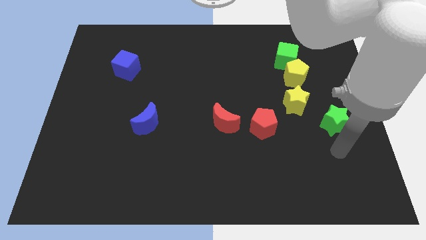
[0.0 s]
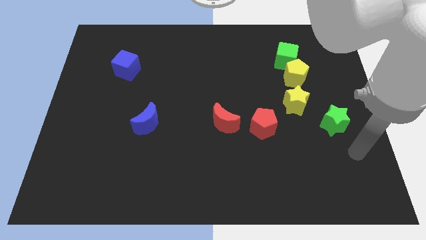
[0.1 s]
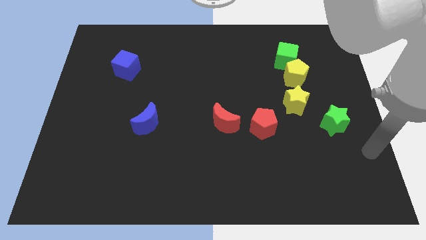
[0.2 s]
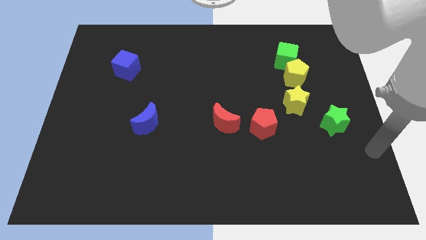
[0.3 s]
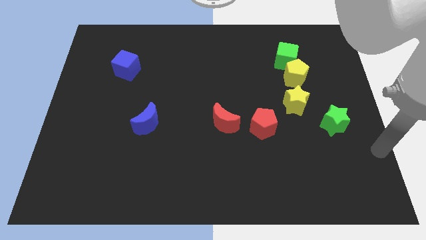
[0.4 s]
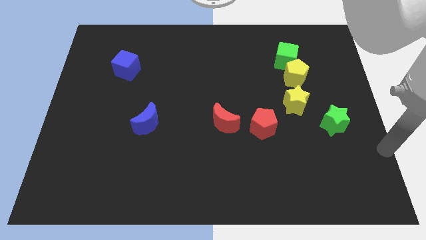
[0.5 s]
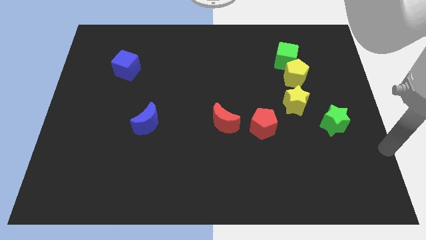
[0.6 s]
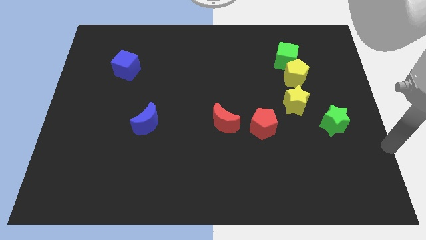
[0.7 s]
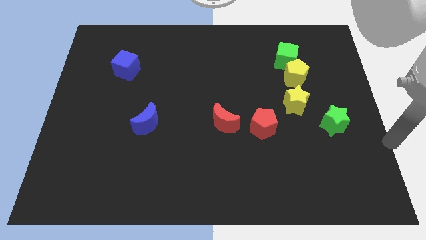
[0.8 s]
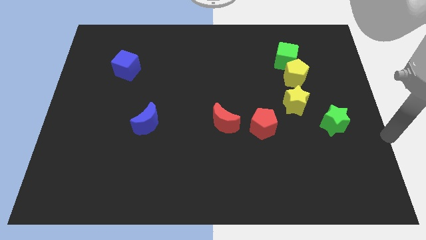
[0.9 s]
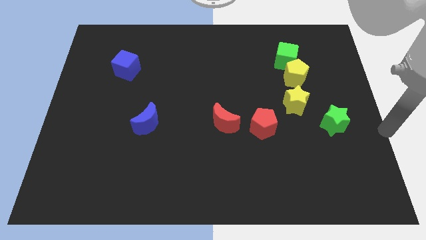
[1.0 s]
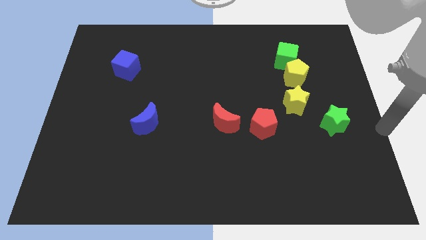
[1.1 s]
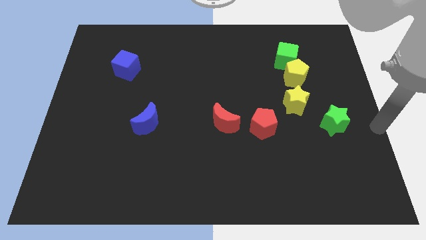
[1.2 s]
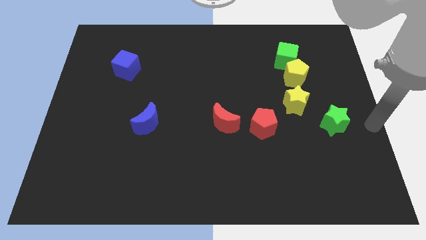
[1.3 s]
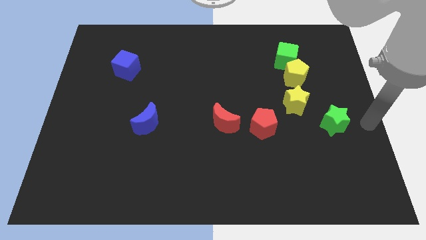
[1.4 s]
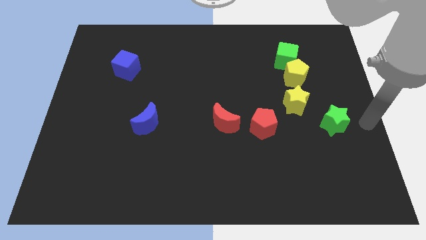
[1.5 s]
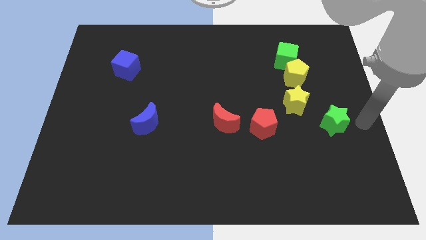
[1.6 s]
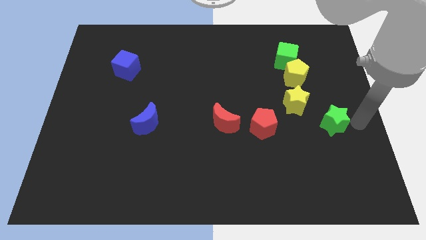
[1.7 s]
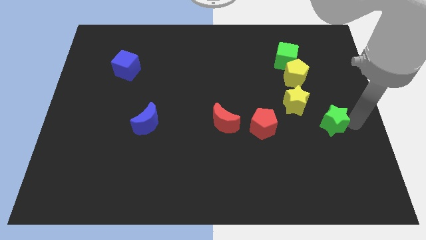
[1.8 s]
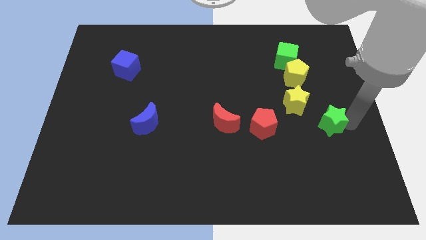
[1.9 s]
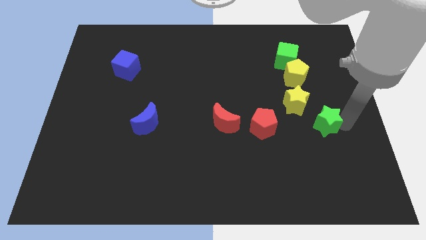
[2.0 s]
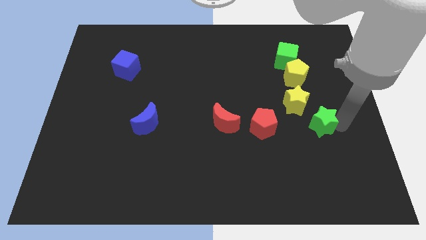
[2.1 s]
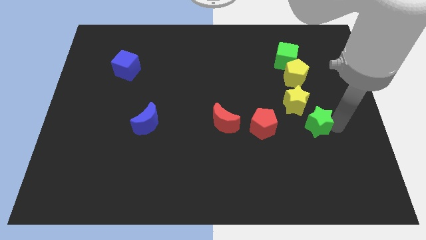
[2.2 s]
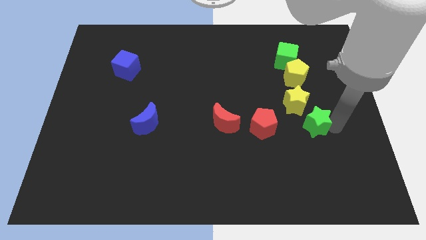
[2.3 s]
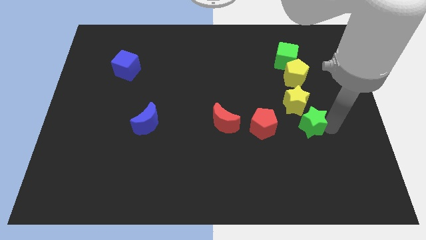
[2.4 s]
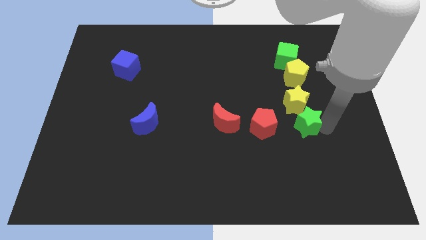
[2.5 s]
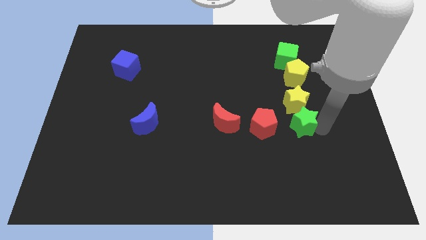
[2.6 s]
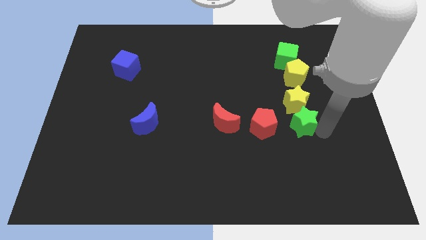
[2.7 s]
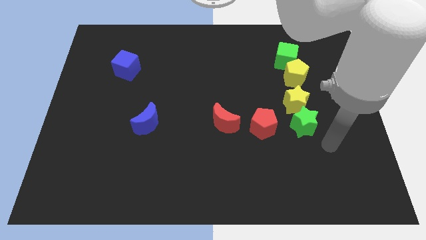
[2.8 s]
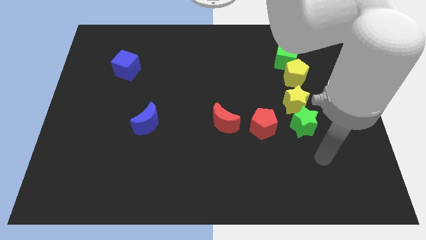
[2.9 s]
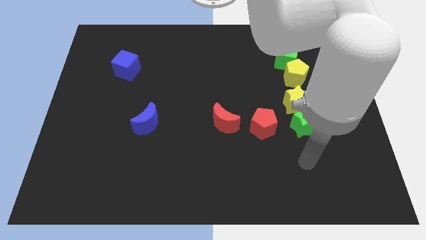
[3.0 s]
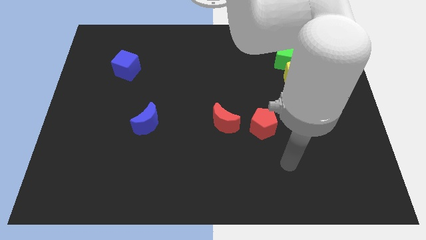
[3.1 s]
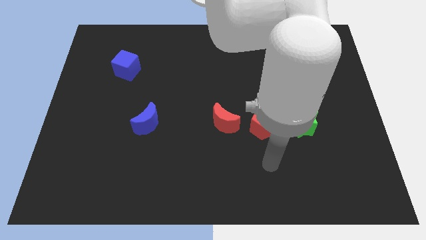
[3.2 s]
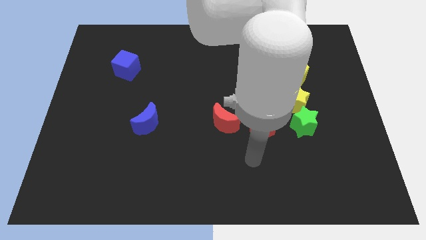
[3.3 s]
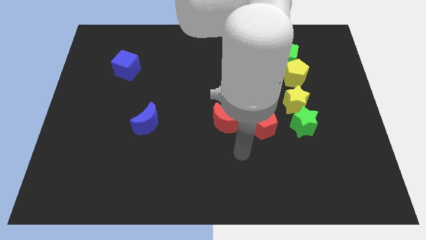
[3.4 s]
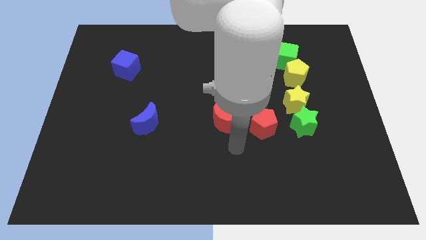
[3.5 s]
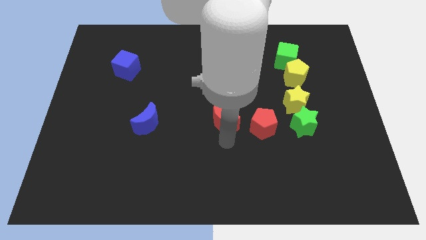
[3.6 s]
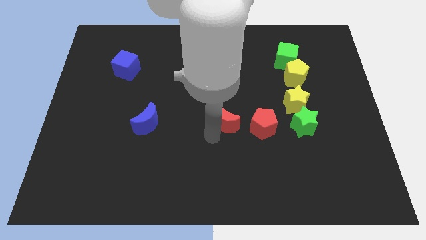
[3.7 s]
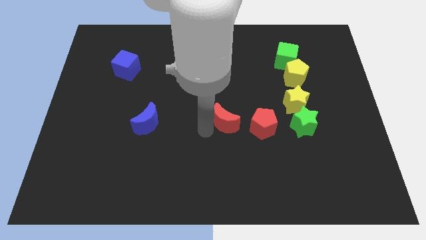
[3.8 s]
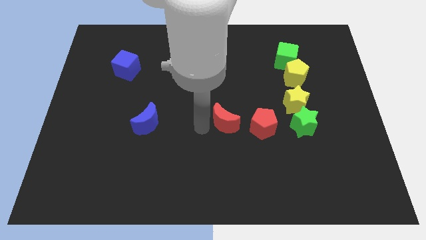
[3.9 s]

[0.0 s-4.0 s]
place the green star right to the red pentagon

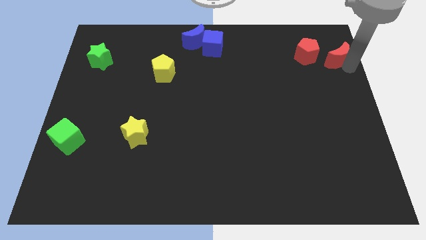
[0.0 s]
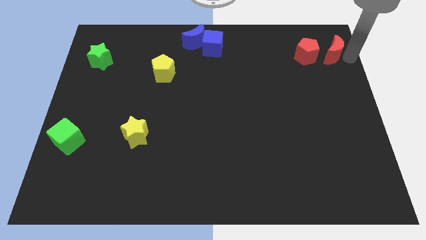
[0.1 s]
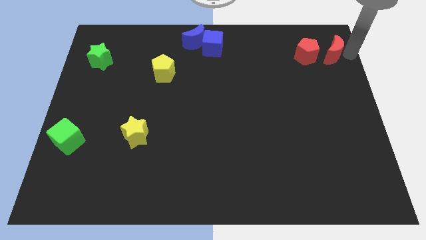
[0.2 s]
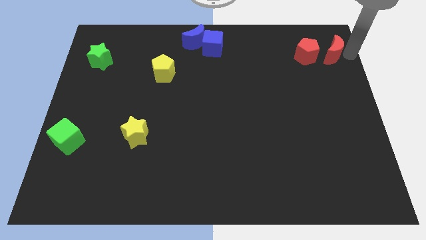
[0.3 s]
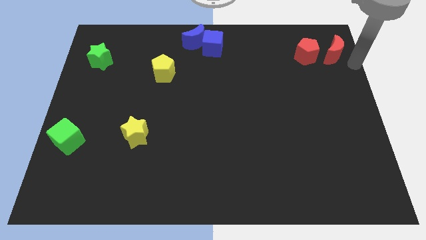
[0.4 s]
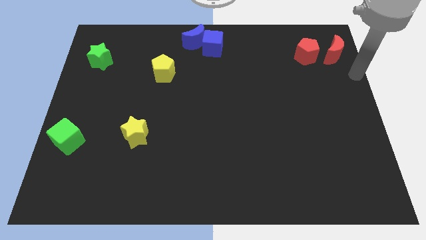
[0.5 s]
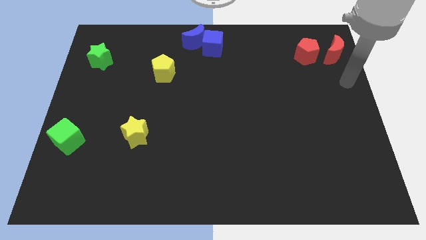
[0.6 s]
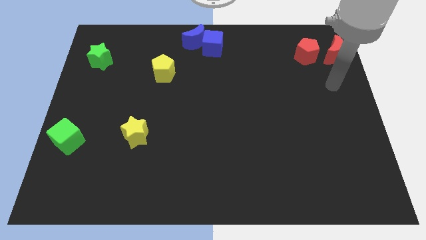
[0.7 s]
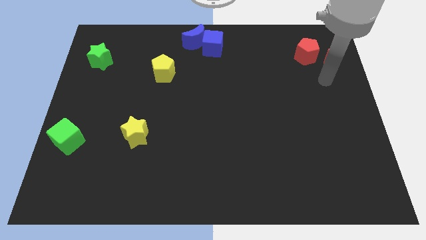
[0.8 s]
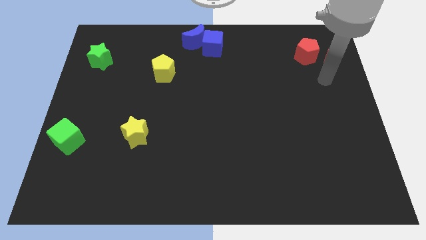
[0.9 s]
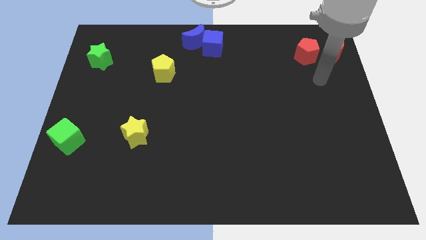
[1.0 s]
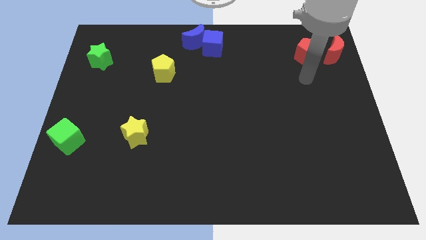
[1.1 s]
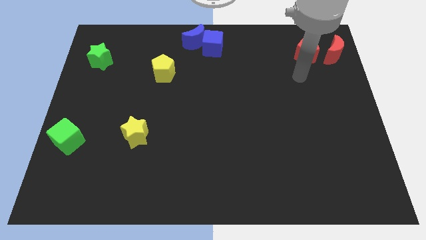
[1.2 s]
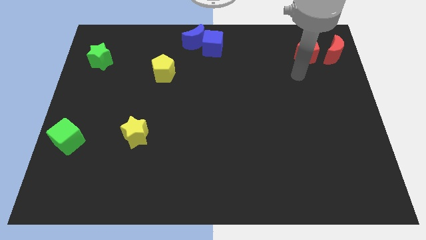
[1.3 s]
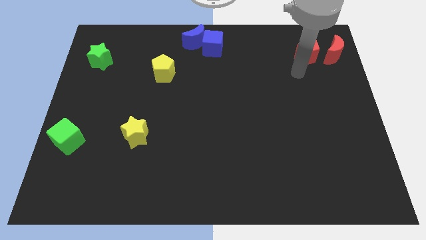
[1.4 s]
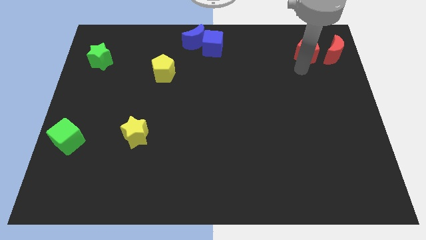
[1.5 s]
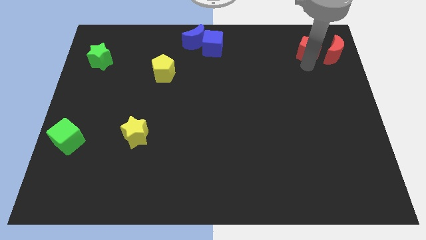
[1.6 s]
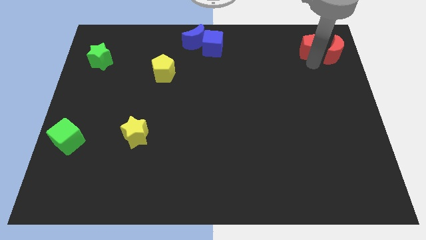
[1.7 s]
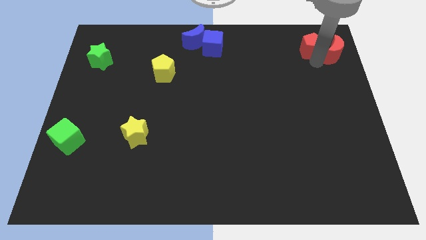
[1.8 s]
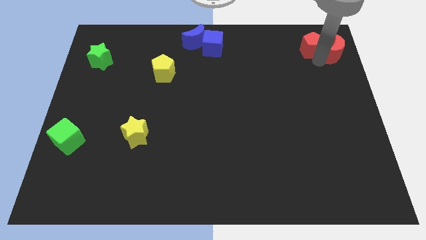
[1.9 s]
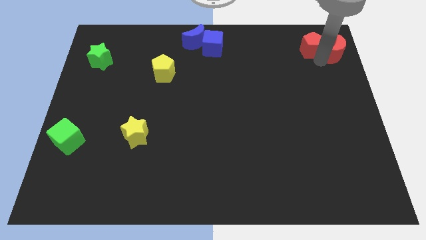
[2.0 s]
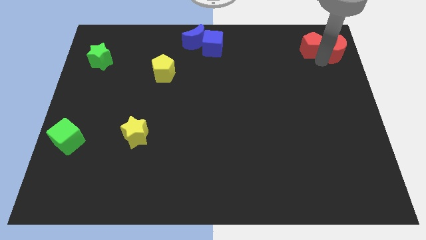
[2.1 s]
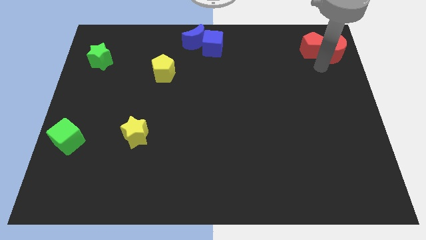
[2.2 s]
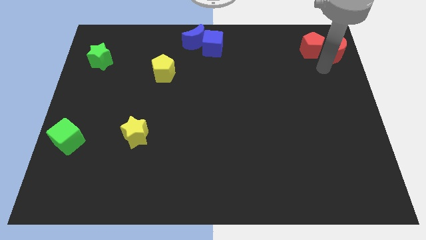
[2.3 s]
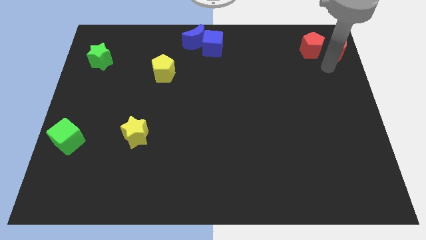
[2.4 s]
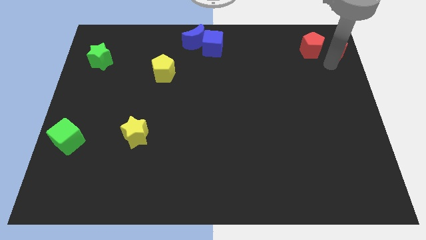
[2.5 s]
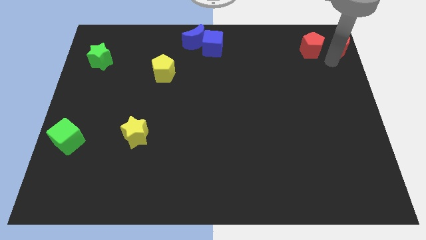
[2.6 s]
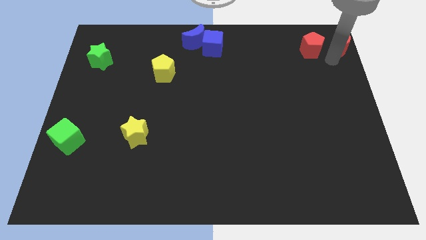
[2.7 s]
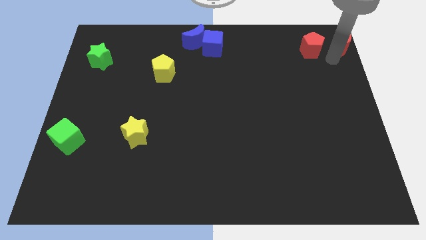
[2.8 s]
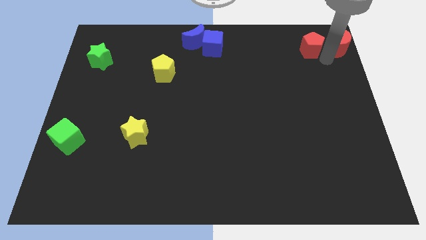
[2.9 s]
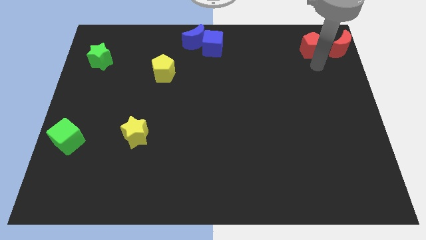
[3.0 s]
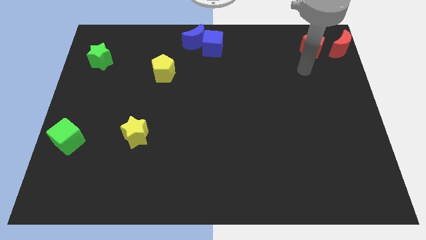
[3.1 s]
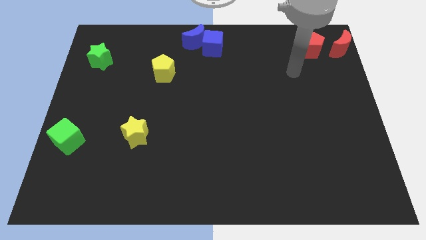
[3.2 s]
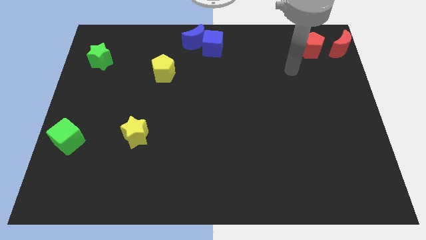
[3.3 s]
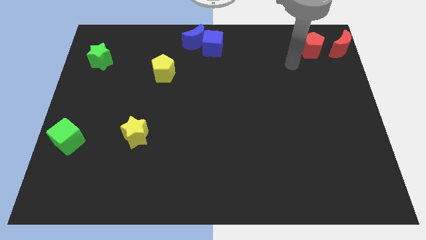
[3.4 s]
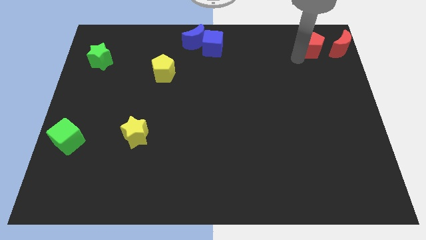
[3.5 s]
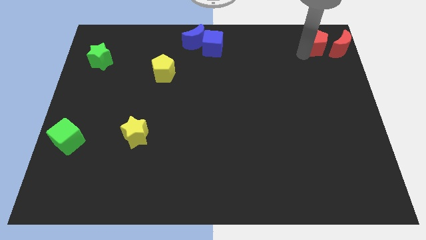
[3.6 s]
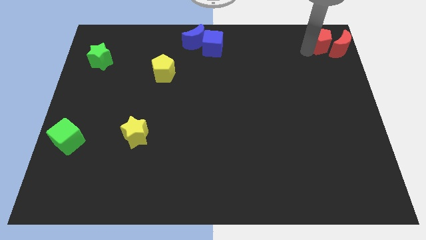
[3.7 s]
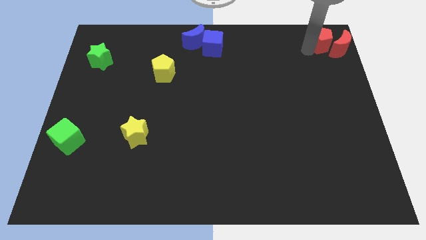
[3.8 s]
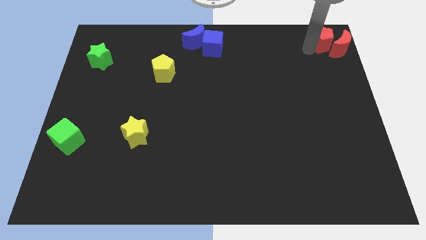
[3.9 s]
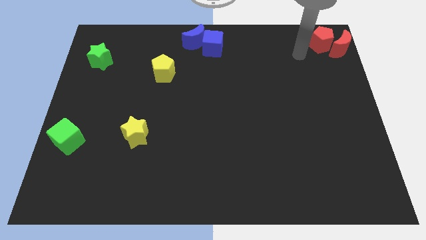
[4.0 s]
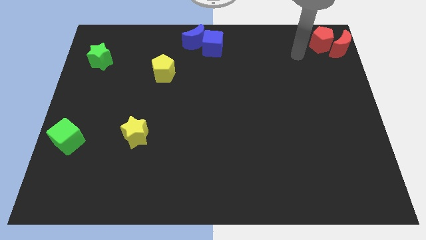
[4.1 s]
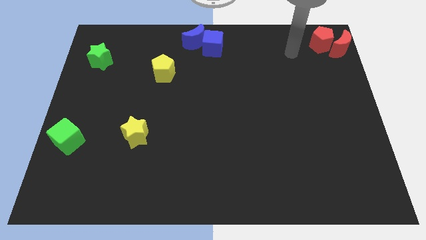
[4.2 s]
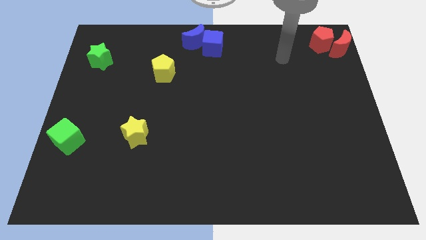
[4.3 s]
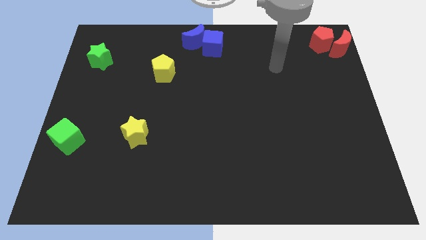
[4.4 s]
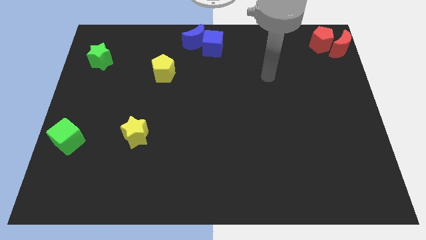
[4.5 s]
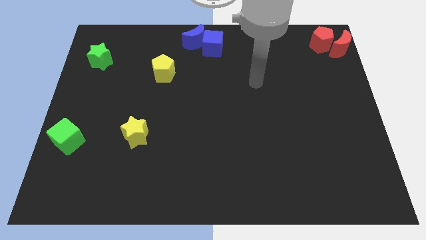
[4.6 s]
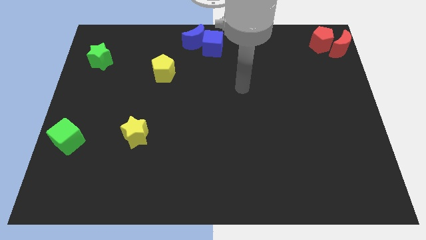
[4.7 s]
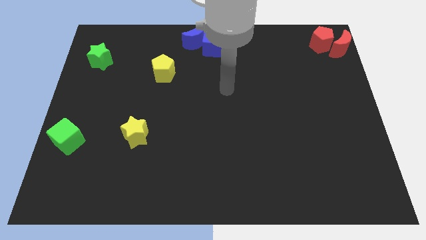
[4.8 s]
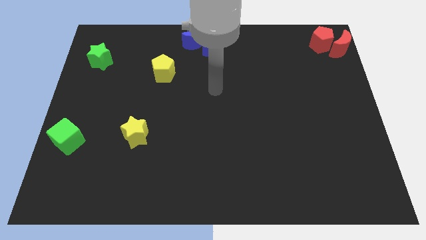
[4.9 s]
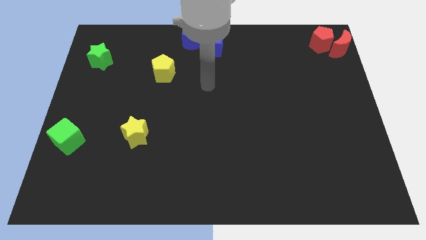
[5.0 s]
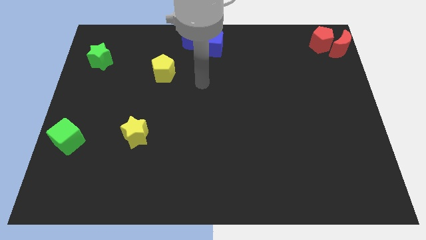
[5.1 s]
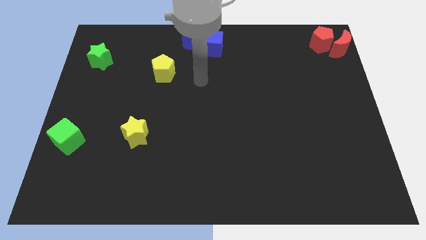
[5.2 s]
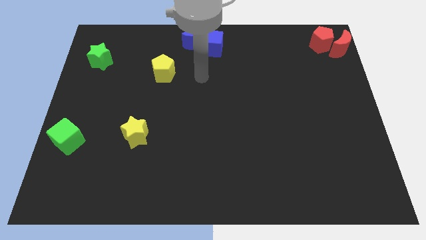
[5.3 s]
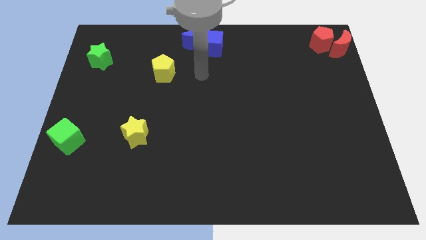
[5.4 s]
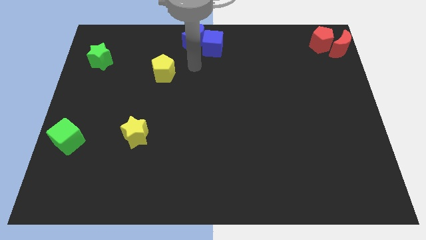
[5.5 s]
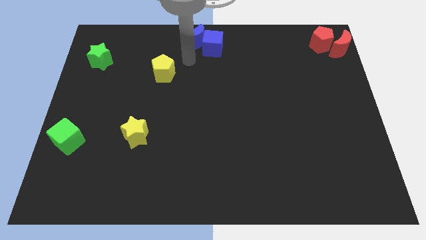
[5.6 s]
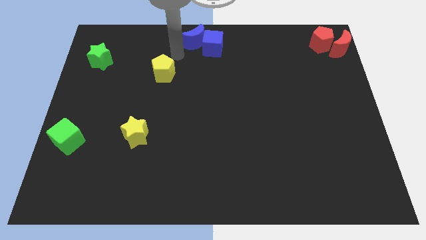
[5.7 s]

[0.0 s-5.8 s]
place red pentagon to the top right corner of the board
